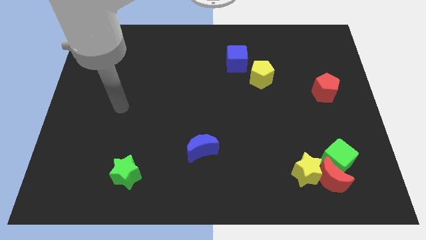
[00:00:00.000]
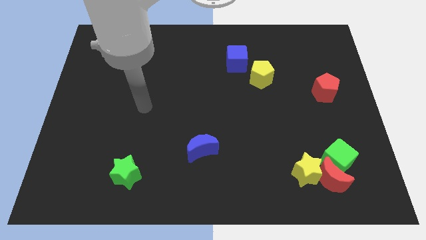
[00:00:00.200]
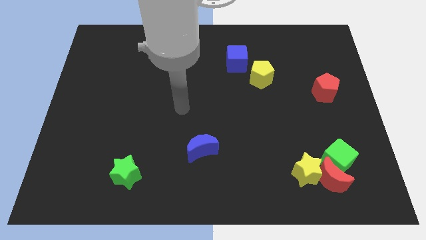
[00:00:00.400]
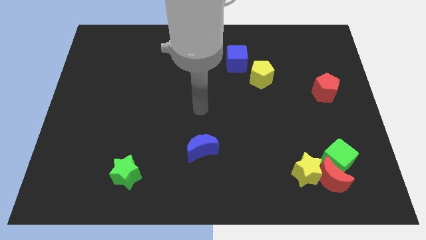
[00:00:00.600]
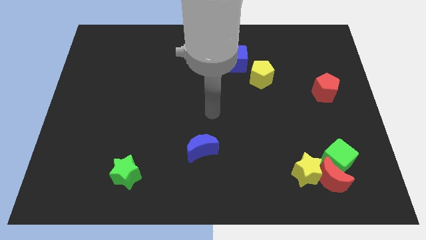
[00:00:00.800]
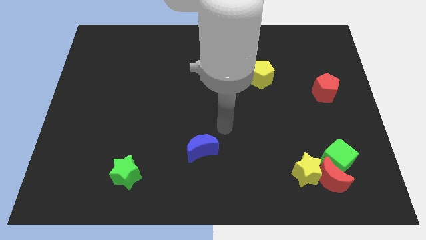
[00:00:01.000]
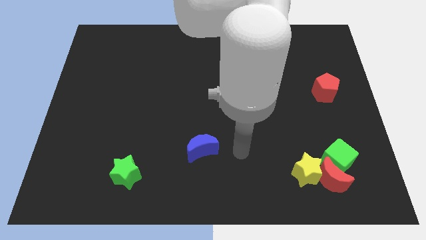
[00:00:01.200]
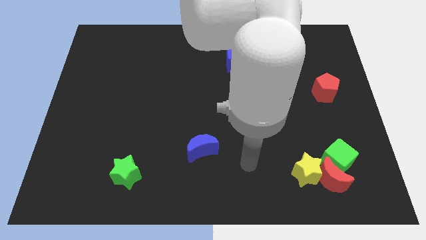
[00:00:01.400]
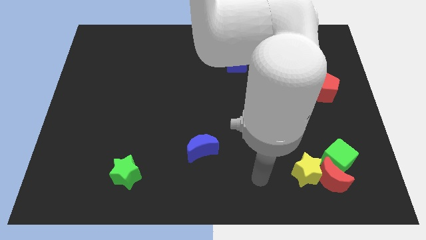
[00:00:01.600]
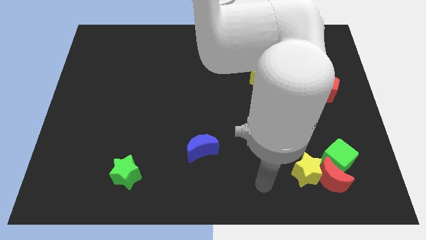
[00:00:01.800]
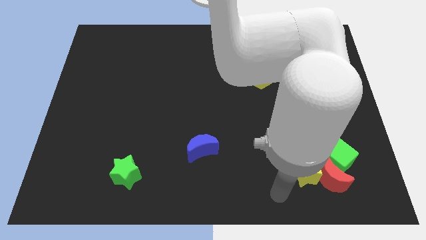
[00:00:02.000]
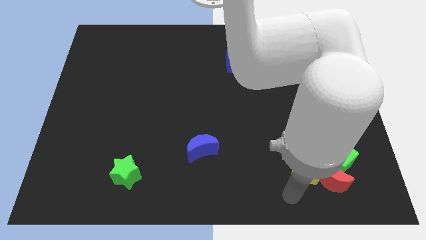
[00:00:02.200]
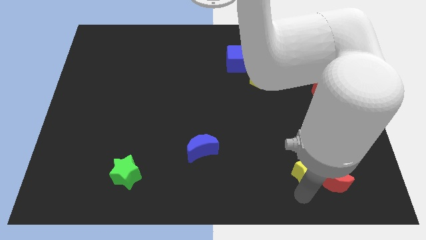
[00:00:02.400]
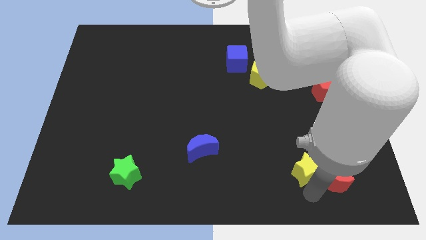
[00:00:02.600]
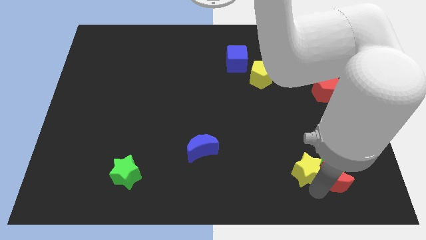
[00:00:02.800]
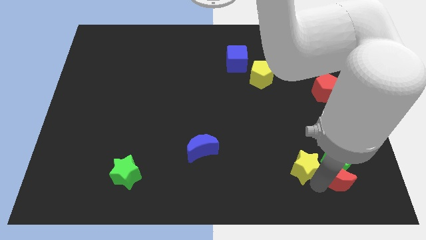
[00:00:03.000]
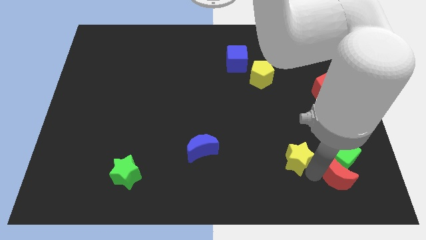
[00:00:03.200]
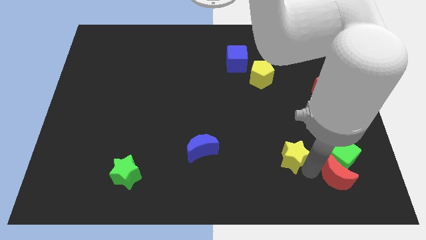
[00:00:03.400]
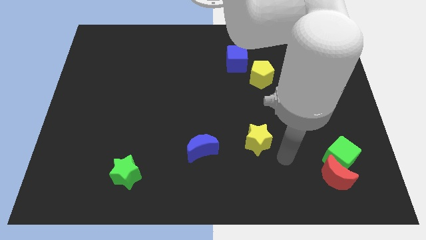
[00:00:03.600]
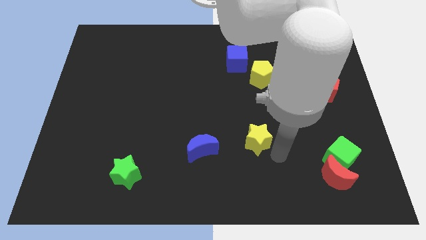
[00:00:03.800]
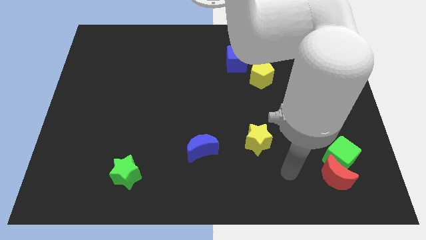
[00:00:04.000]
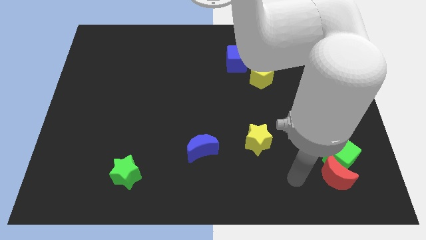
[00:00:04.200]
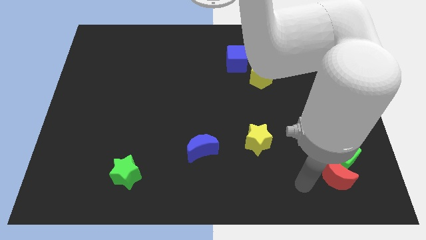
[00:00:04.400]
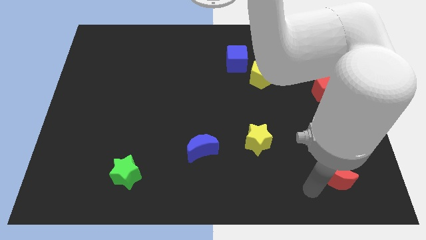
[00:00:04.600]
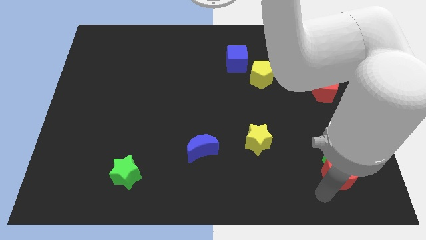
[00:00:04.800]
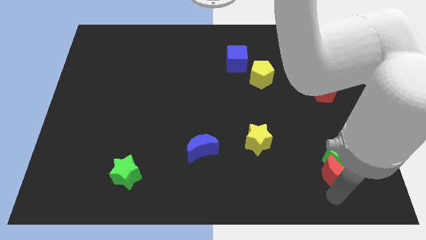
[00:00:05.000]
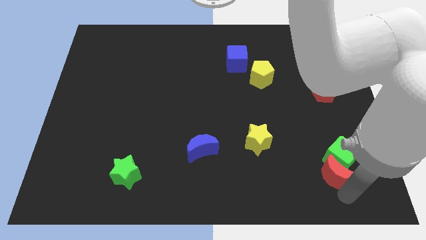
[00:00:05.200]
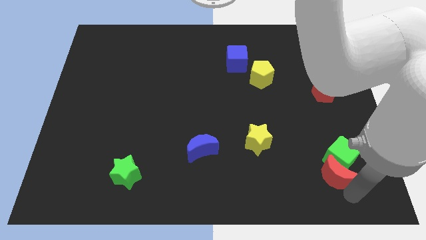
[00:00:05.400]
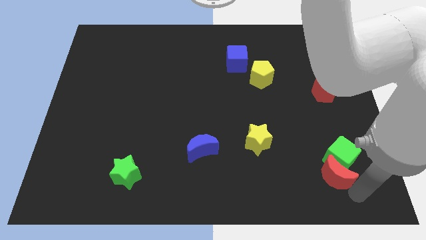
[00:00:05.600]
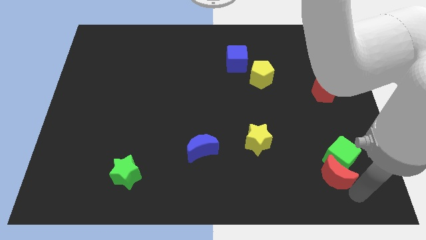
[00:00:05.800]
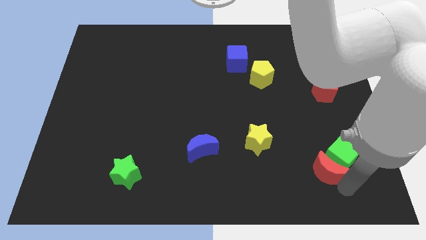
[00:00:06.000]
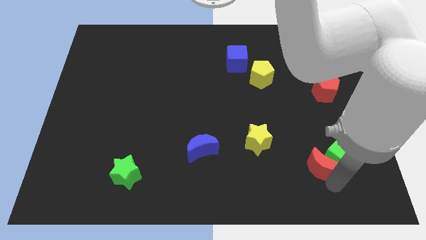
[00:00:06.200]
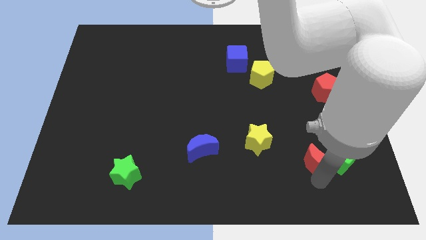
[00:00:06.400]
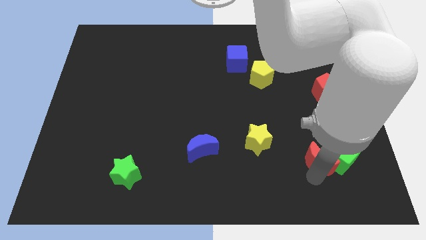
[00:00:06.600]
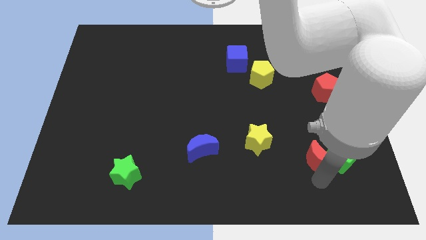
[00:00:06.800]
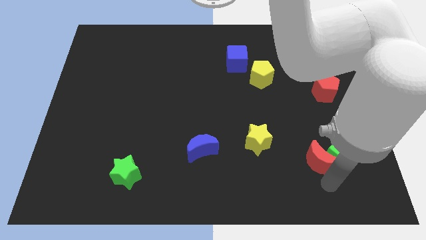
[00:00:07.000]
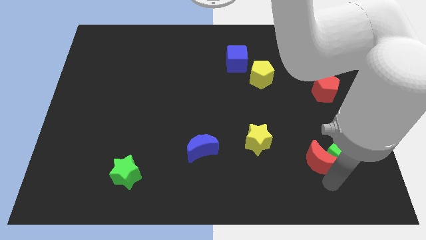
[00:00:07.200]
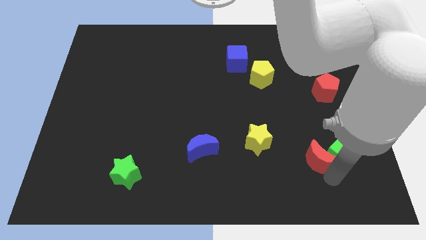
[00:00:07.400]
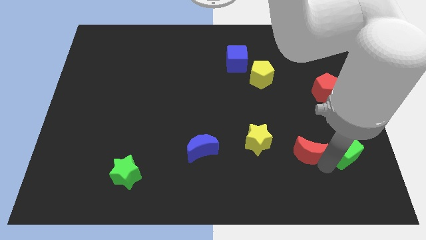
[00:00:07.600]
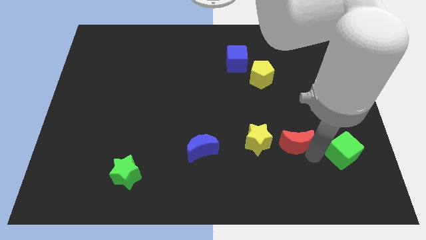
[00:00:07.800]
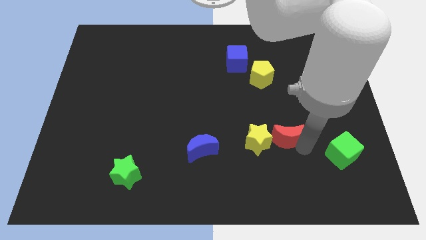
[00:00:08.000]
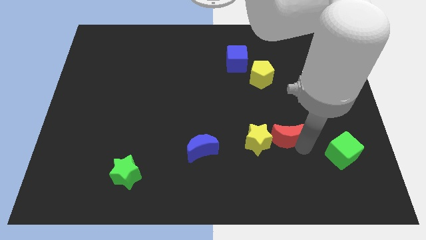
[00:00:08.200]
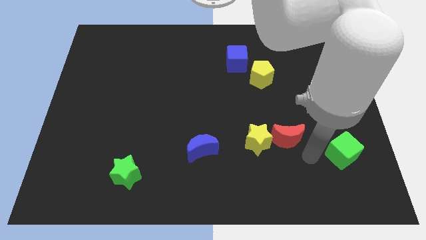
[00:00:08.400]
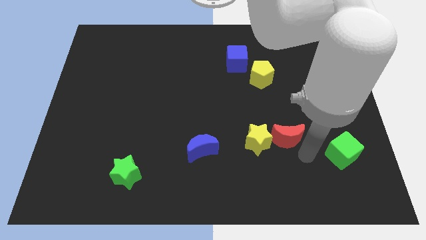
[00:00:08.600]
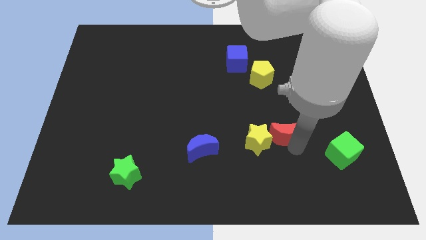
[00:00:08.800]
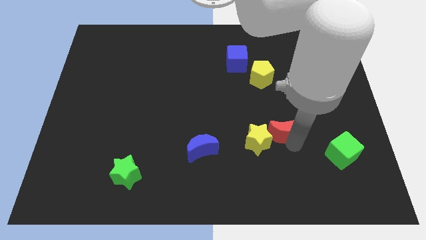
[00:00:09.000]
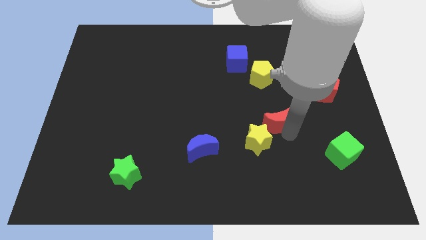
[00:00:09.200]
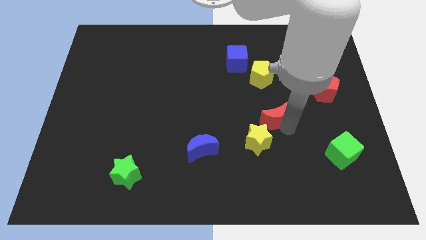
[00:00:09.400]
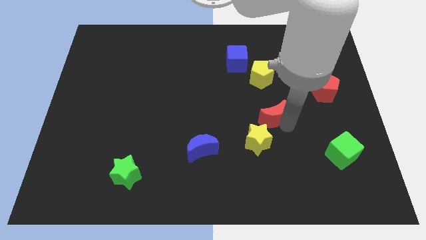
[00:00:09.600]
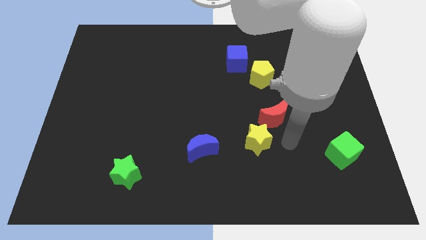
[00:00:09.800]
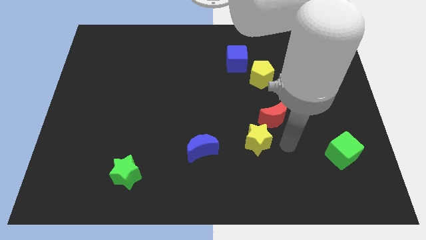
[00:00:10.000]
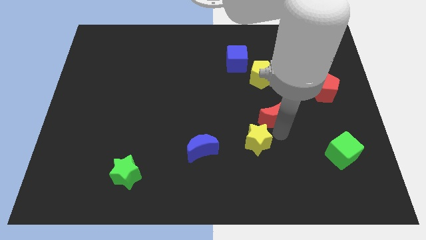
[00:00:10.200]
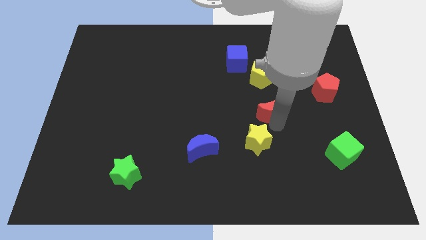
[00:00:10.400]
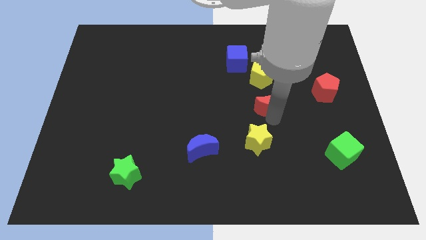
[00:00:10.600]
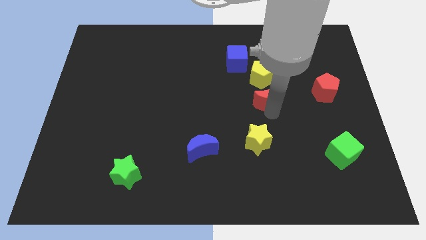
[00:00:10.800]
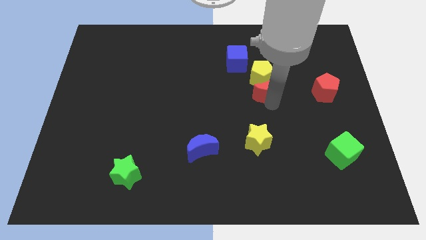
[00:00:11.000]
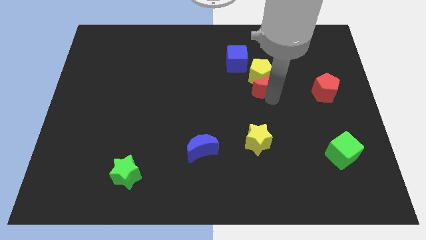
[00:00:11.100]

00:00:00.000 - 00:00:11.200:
slide the red moon to the yellow pentagon

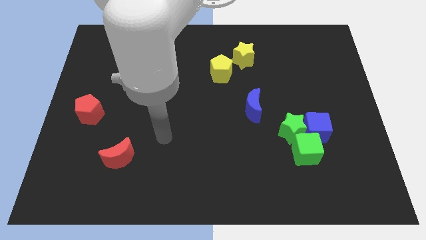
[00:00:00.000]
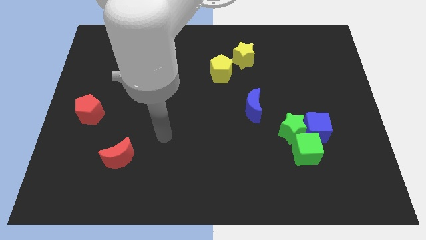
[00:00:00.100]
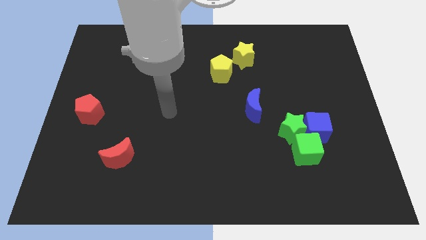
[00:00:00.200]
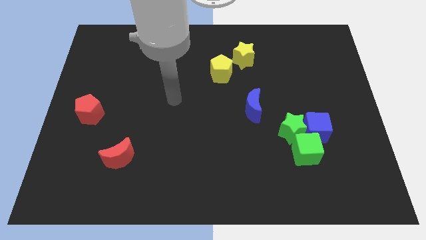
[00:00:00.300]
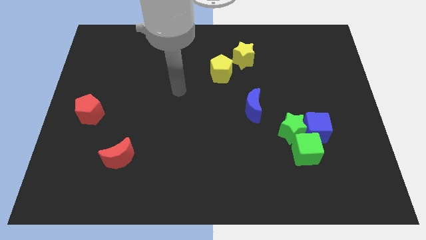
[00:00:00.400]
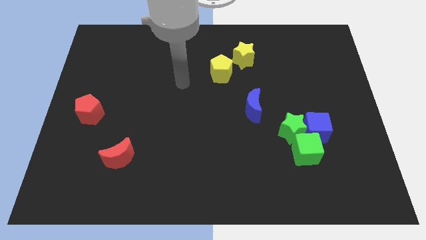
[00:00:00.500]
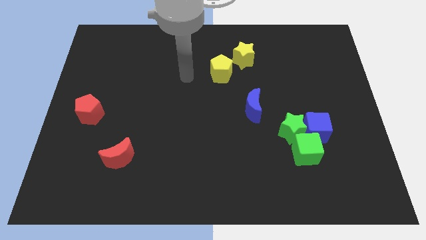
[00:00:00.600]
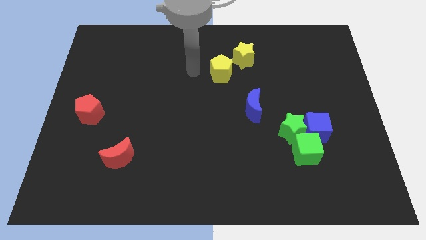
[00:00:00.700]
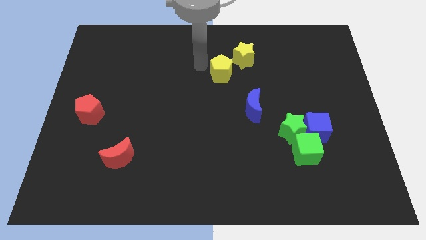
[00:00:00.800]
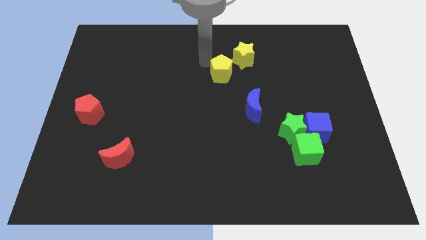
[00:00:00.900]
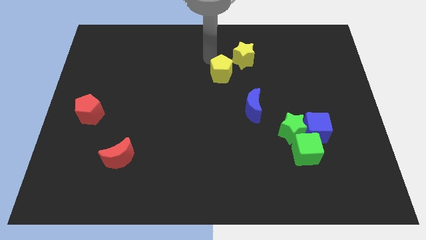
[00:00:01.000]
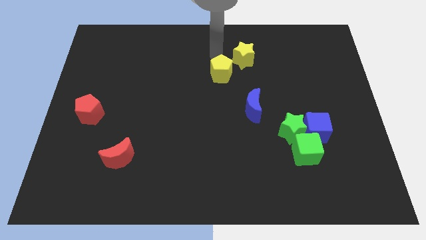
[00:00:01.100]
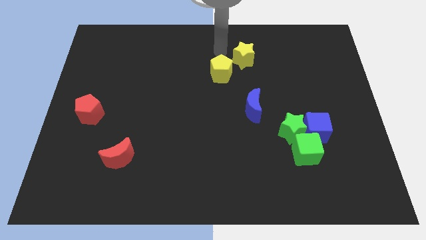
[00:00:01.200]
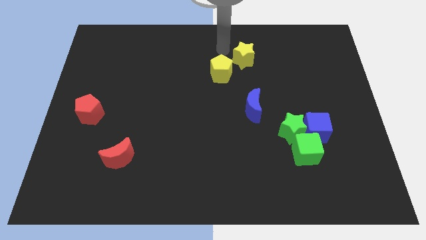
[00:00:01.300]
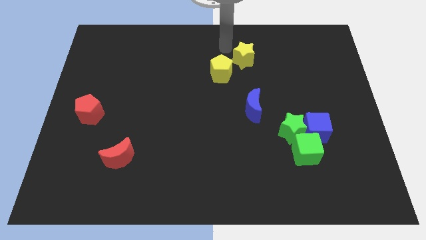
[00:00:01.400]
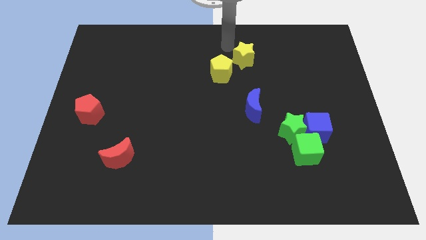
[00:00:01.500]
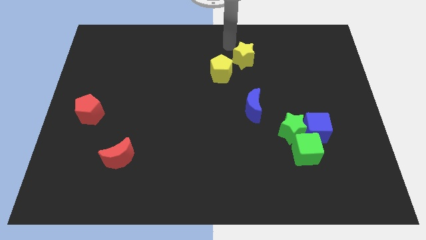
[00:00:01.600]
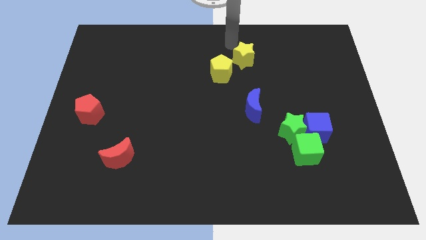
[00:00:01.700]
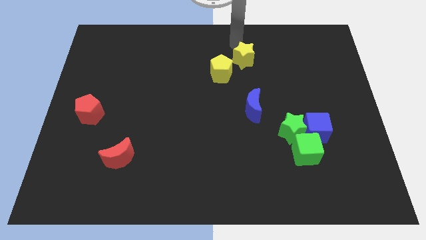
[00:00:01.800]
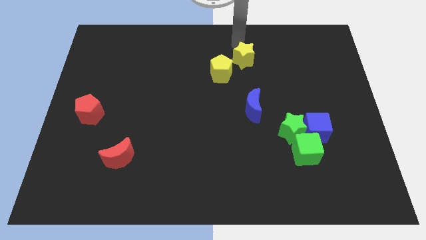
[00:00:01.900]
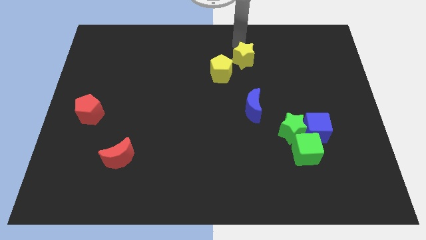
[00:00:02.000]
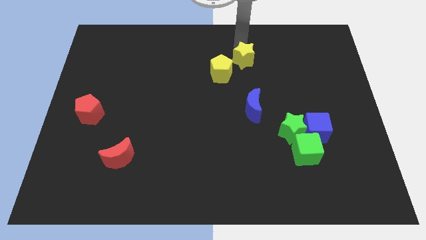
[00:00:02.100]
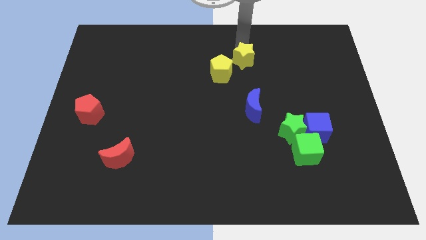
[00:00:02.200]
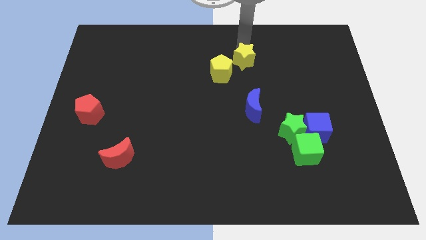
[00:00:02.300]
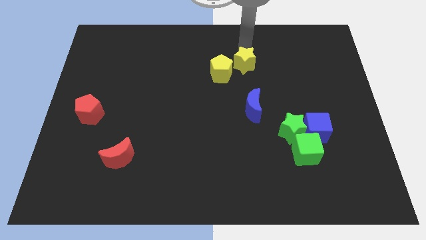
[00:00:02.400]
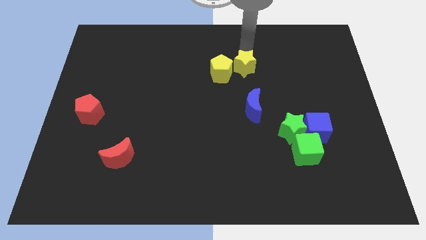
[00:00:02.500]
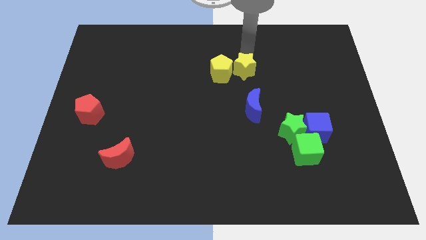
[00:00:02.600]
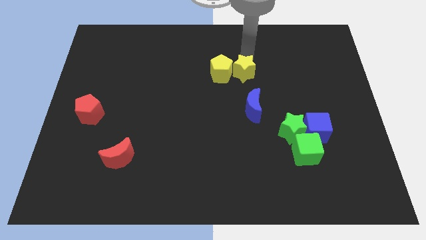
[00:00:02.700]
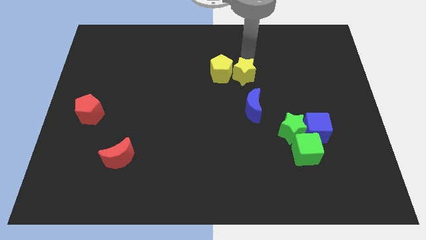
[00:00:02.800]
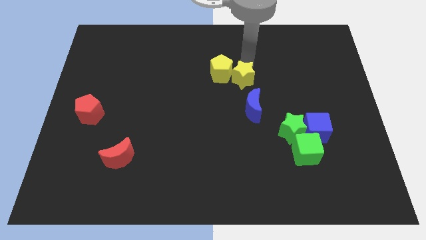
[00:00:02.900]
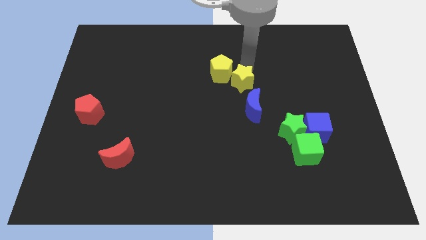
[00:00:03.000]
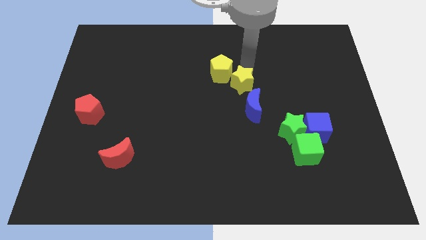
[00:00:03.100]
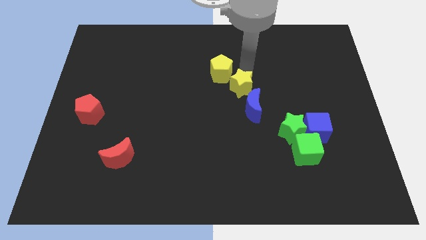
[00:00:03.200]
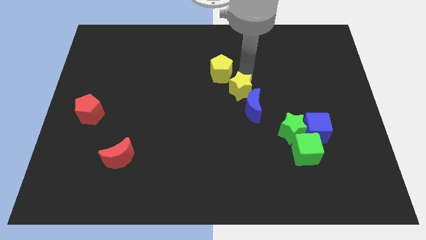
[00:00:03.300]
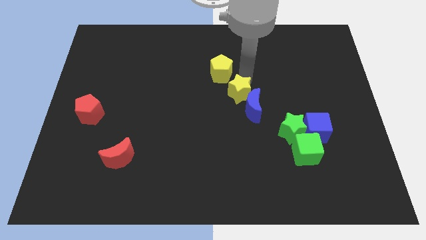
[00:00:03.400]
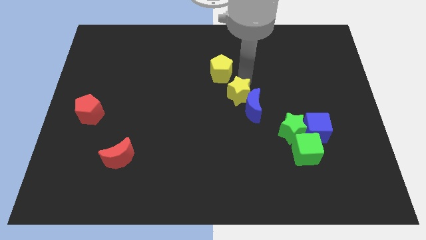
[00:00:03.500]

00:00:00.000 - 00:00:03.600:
move the yellow star to the blue moon
